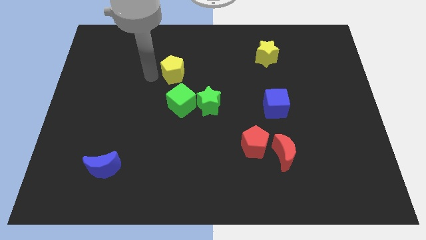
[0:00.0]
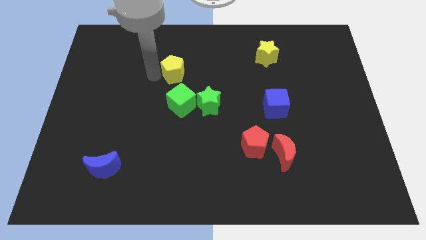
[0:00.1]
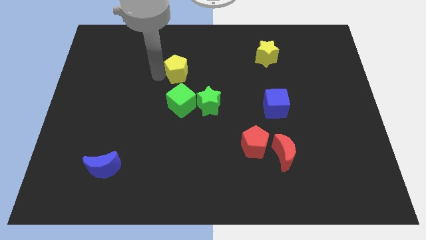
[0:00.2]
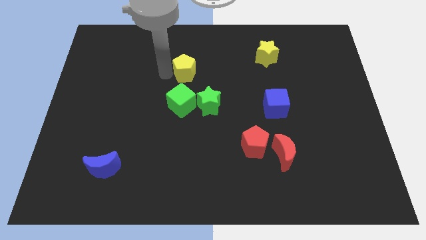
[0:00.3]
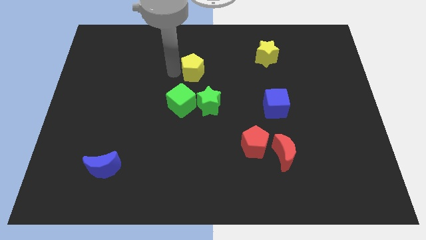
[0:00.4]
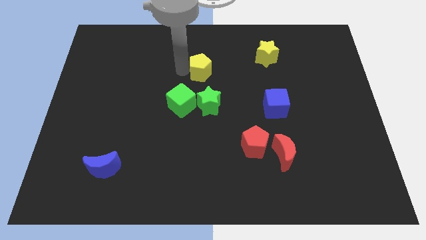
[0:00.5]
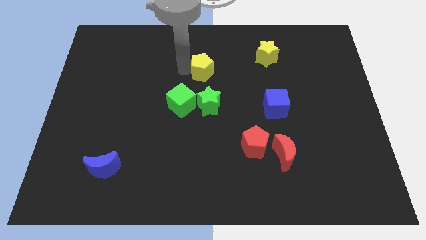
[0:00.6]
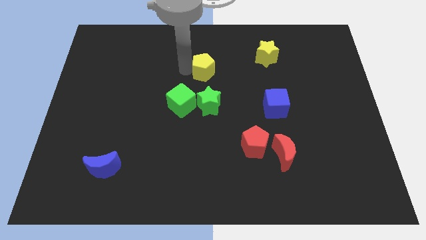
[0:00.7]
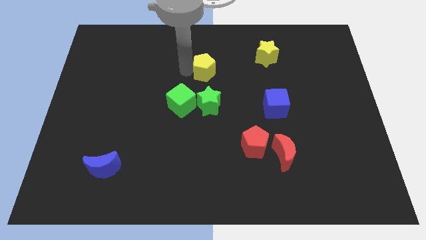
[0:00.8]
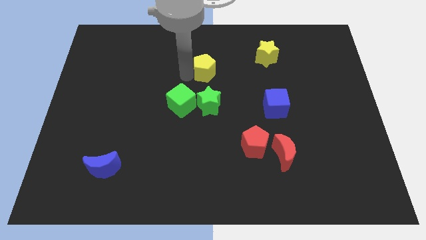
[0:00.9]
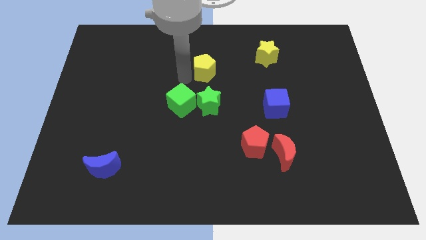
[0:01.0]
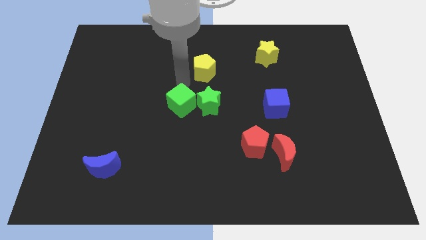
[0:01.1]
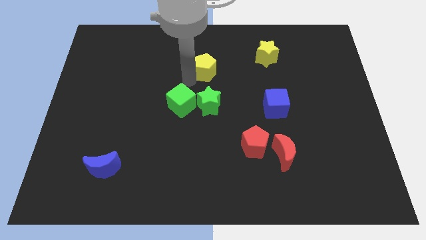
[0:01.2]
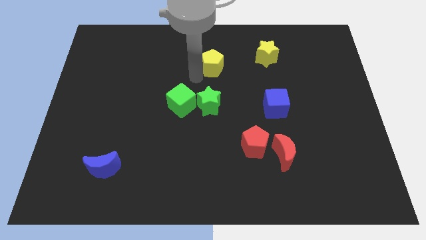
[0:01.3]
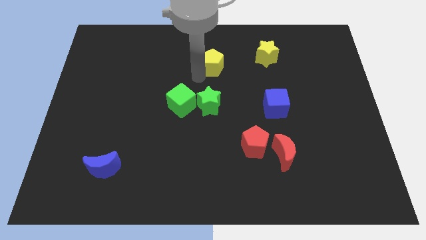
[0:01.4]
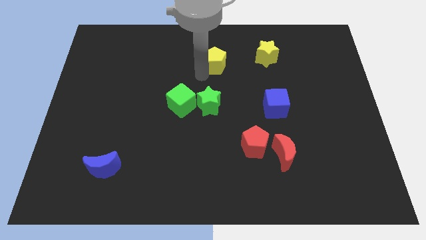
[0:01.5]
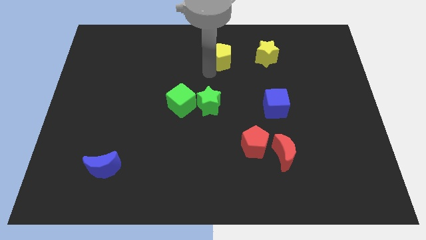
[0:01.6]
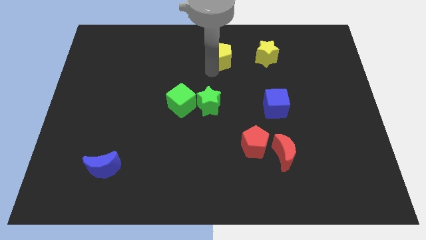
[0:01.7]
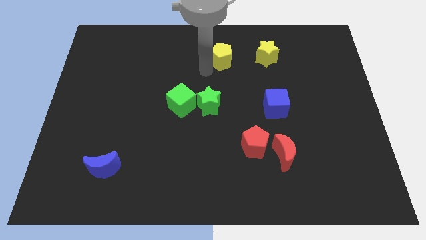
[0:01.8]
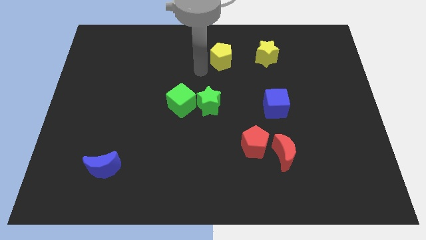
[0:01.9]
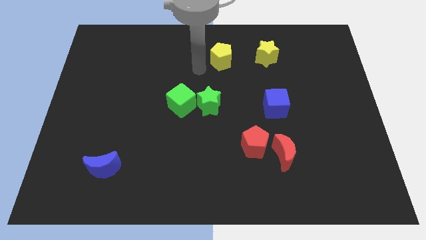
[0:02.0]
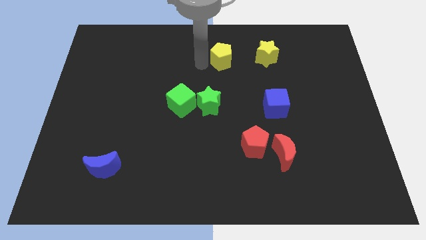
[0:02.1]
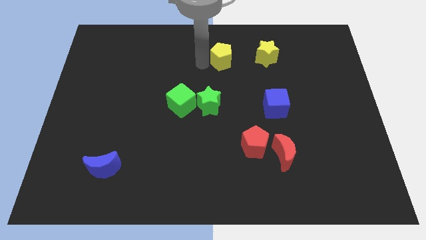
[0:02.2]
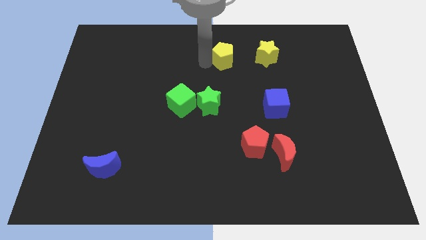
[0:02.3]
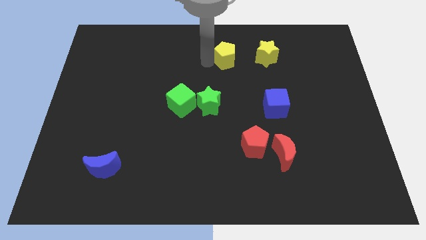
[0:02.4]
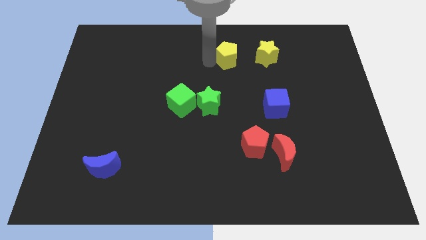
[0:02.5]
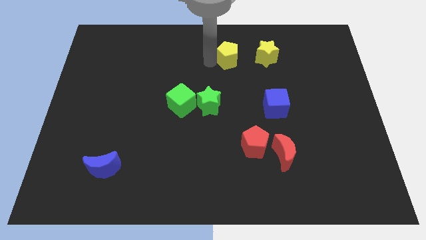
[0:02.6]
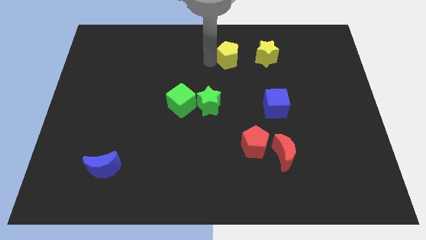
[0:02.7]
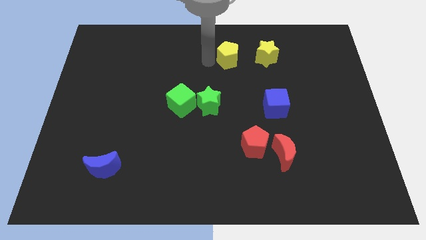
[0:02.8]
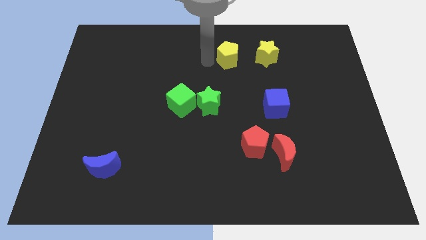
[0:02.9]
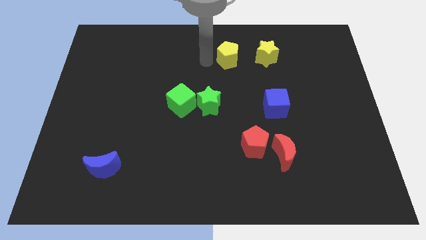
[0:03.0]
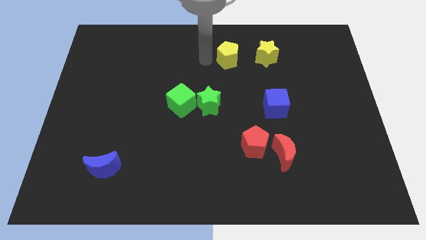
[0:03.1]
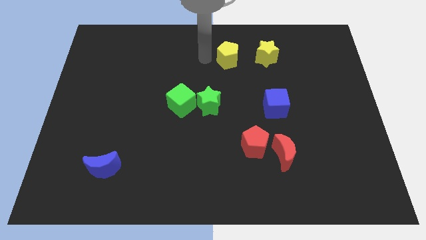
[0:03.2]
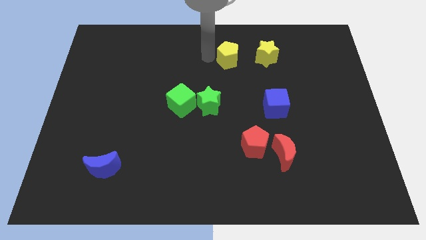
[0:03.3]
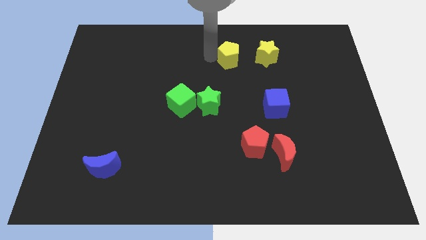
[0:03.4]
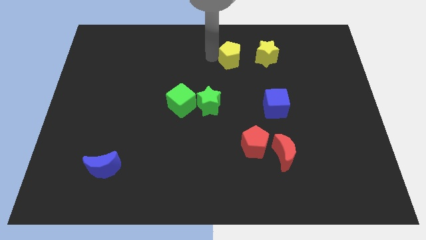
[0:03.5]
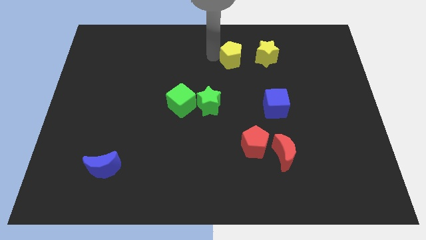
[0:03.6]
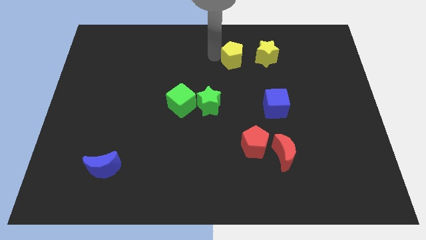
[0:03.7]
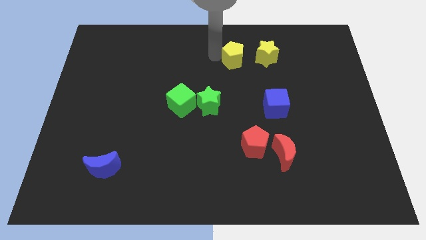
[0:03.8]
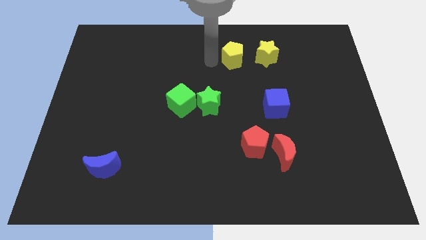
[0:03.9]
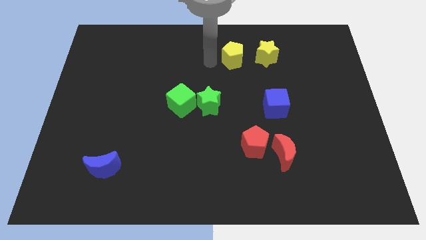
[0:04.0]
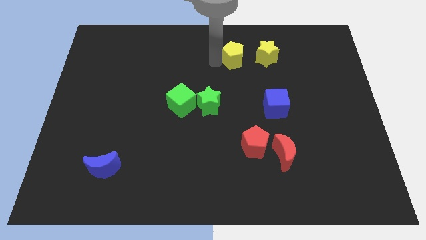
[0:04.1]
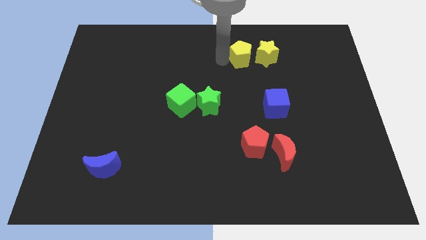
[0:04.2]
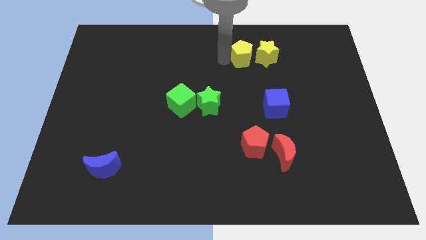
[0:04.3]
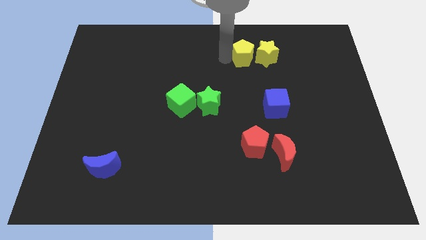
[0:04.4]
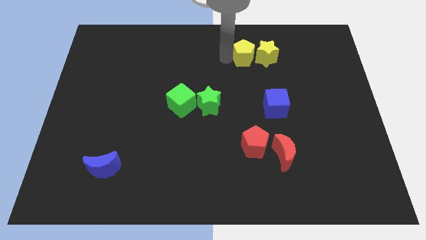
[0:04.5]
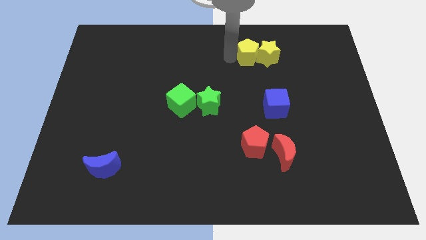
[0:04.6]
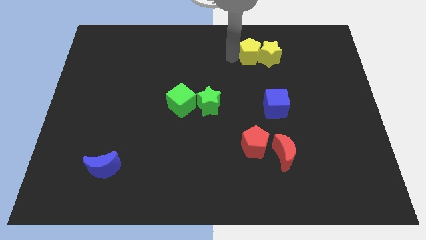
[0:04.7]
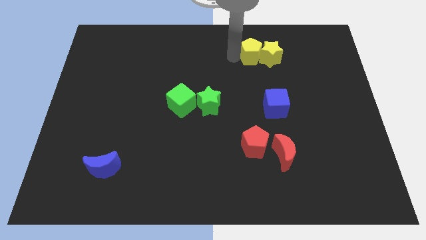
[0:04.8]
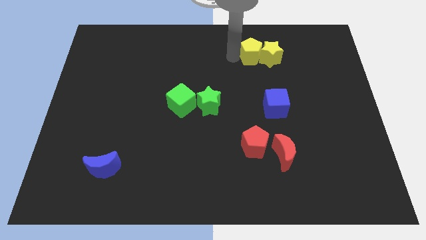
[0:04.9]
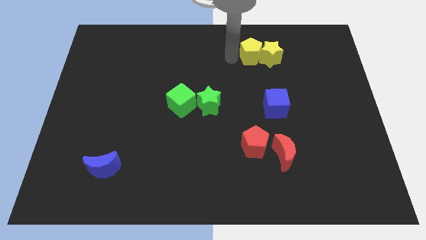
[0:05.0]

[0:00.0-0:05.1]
push the yellow pentagon into the yellow star

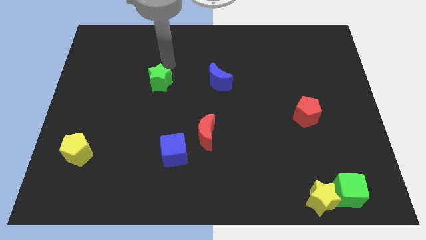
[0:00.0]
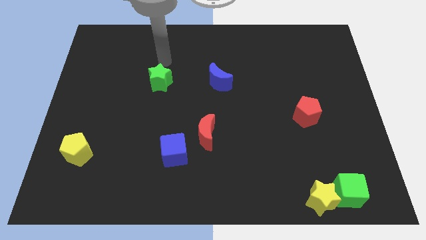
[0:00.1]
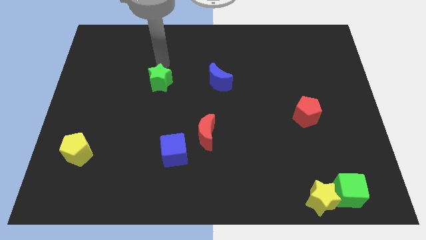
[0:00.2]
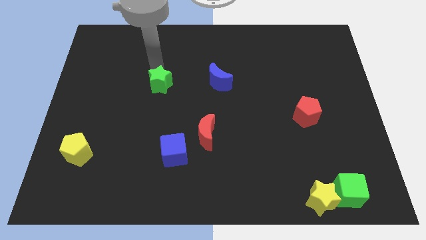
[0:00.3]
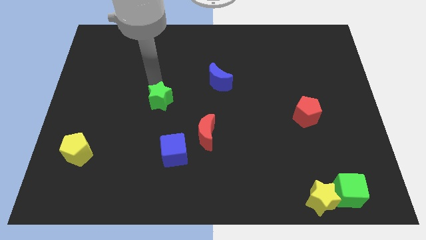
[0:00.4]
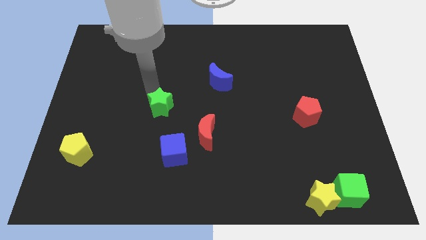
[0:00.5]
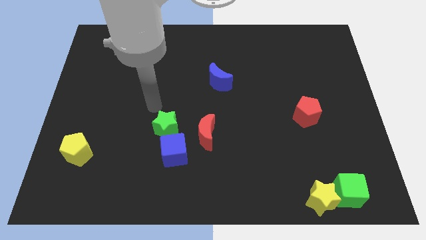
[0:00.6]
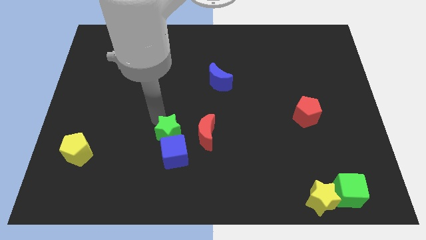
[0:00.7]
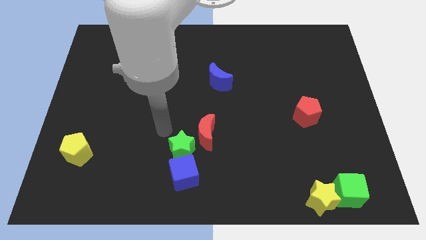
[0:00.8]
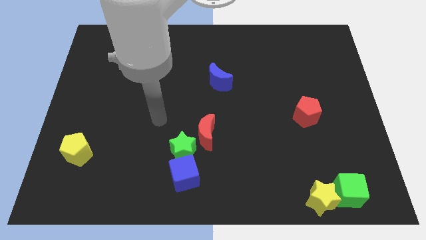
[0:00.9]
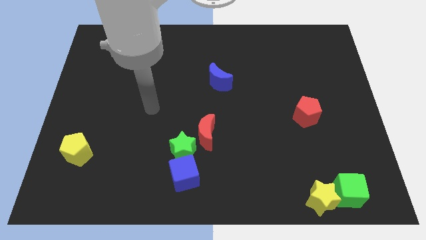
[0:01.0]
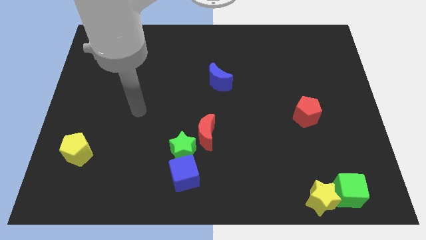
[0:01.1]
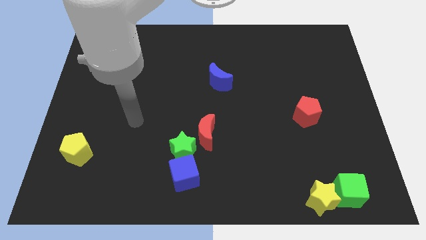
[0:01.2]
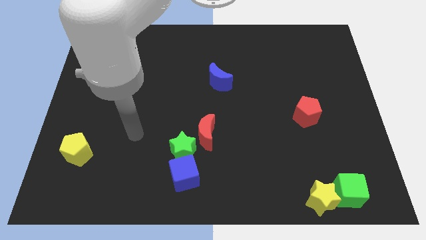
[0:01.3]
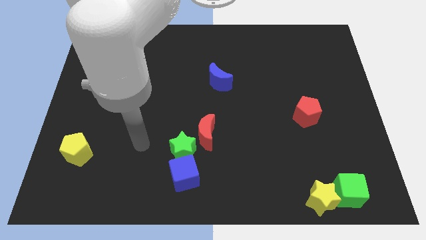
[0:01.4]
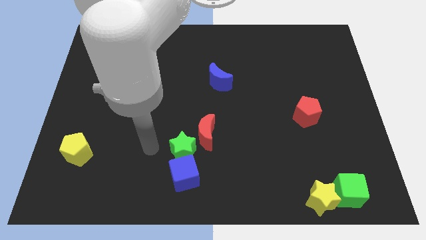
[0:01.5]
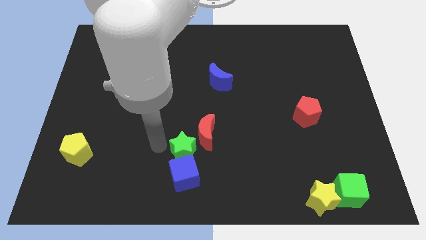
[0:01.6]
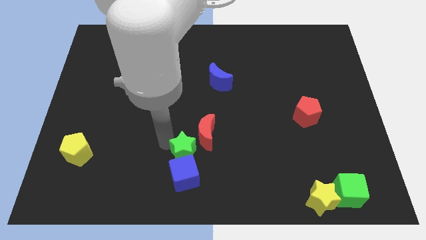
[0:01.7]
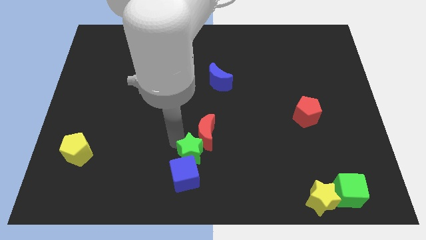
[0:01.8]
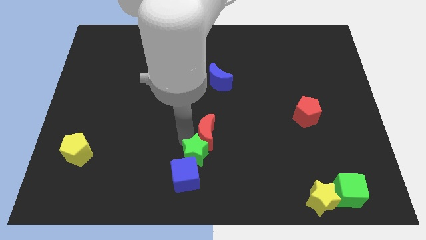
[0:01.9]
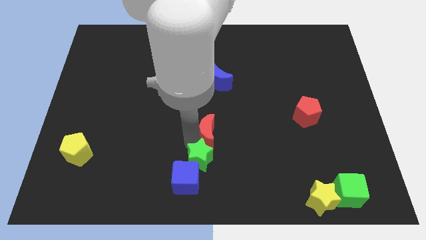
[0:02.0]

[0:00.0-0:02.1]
push the green star to the bottom of the red crescent

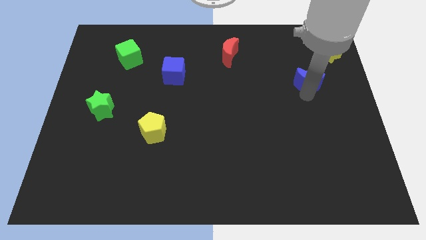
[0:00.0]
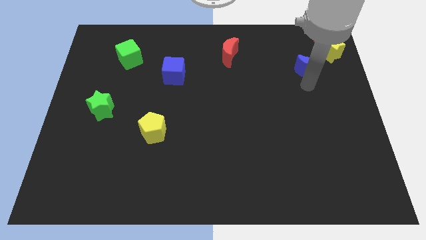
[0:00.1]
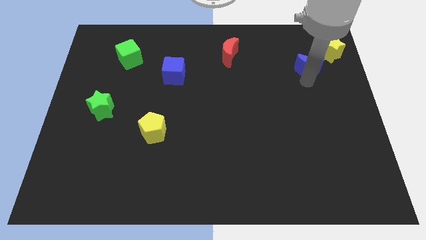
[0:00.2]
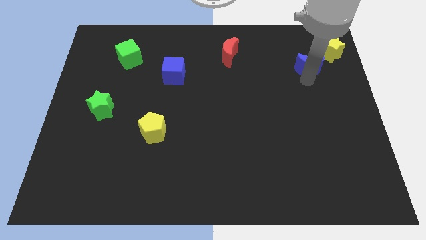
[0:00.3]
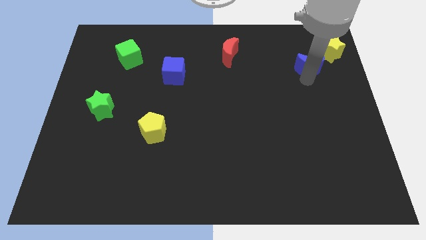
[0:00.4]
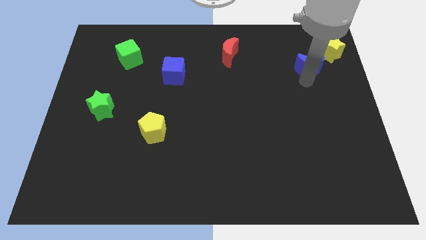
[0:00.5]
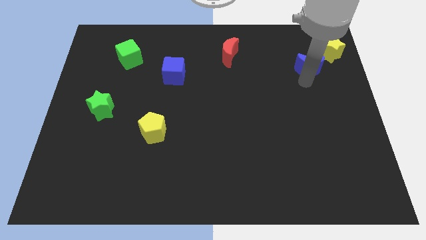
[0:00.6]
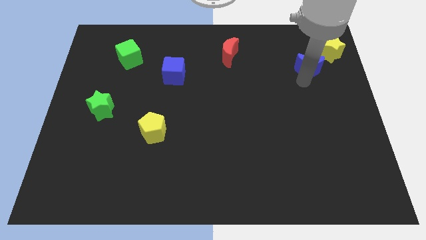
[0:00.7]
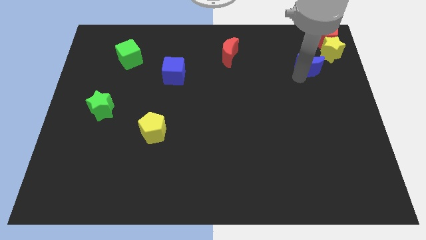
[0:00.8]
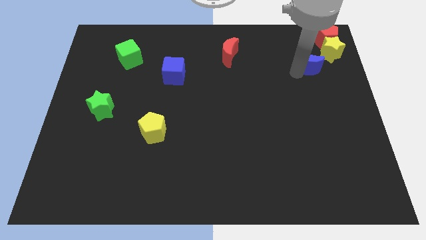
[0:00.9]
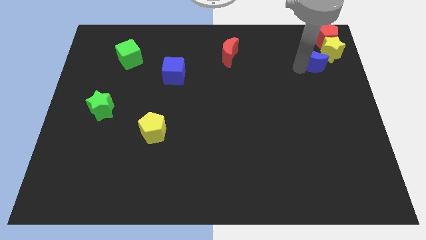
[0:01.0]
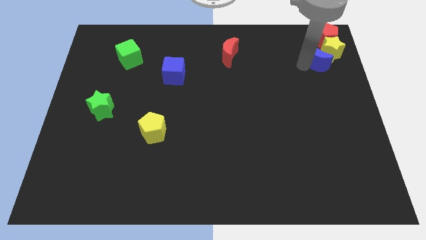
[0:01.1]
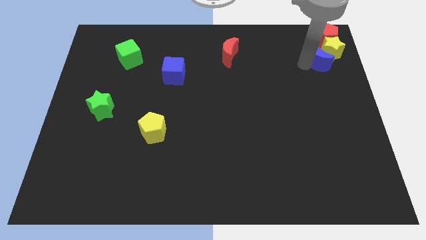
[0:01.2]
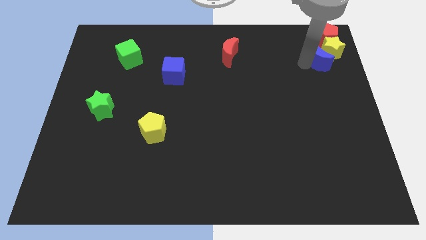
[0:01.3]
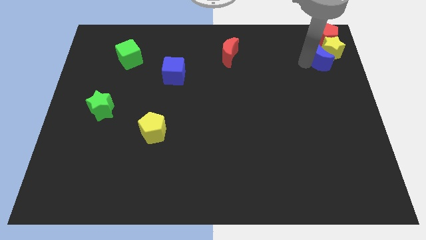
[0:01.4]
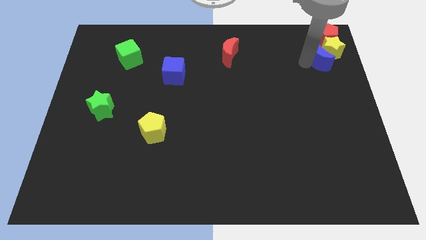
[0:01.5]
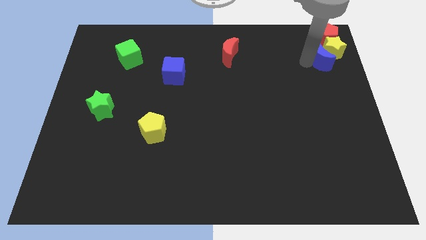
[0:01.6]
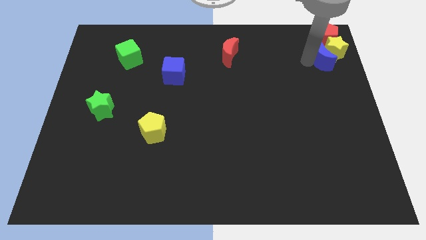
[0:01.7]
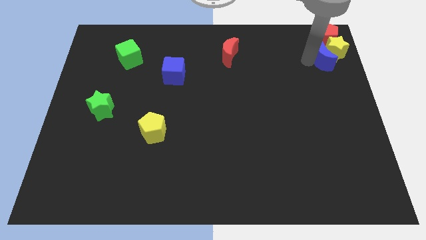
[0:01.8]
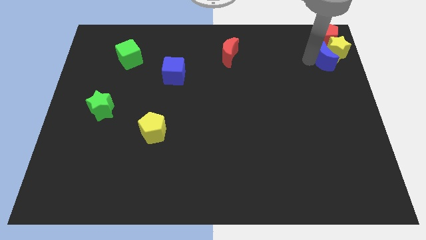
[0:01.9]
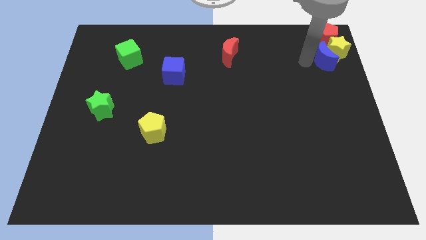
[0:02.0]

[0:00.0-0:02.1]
push the blue moon into the yellow star
